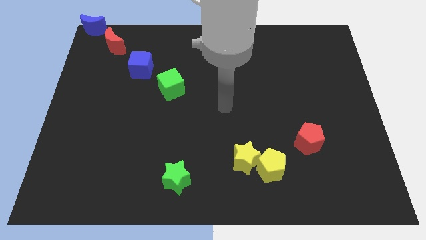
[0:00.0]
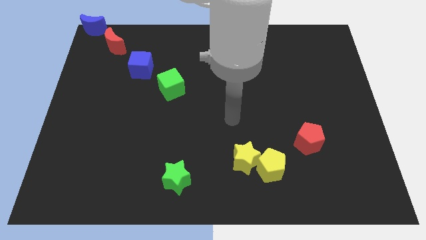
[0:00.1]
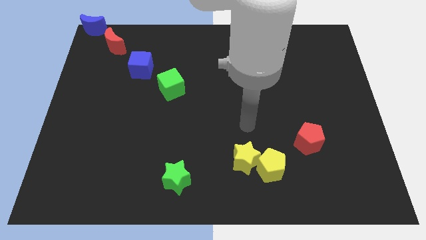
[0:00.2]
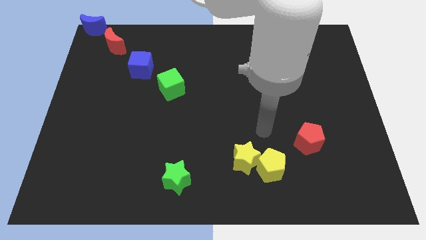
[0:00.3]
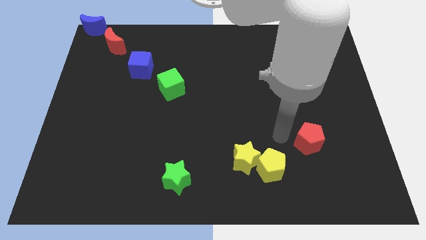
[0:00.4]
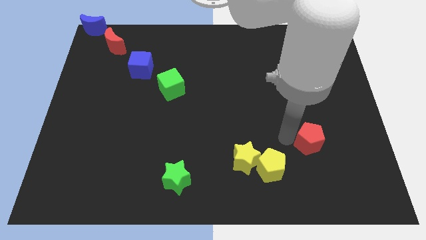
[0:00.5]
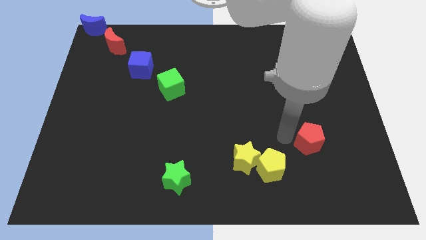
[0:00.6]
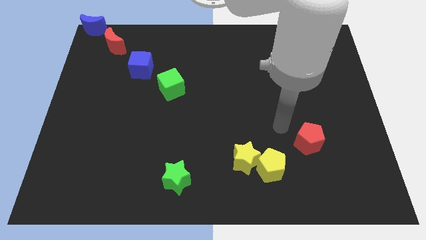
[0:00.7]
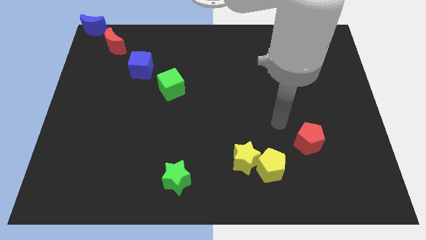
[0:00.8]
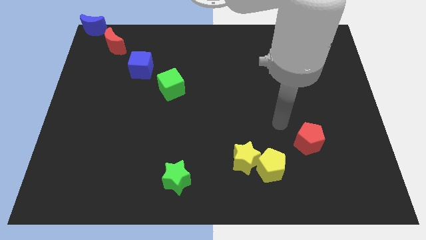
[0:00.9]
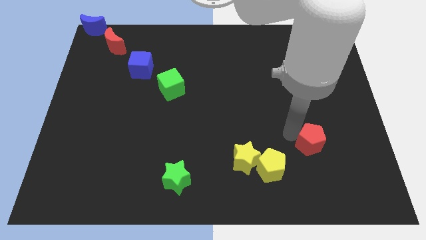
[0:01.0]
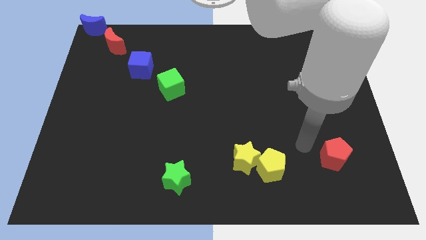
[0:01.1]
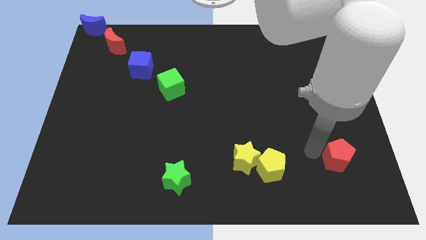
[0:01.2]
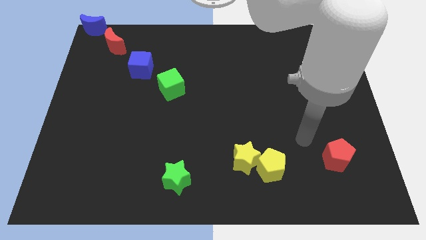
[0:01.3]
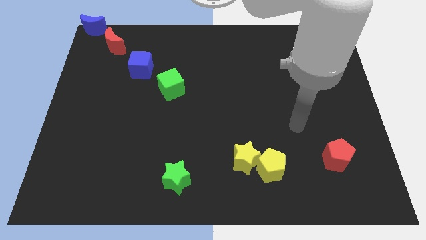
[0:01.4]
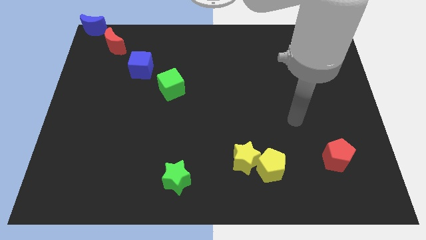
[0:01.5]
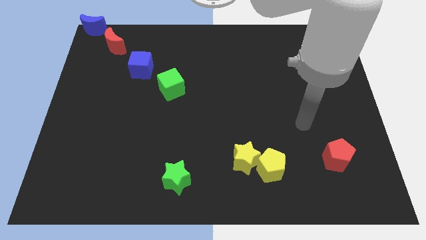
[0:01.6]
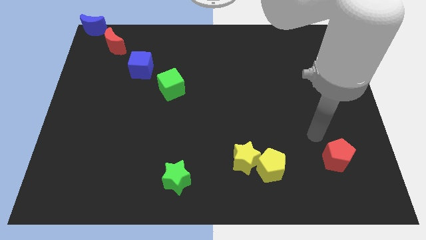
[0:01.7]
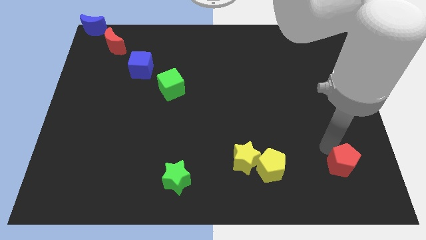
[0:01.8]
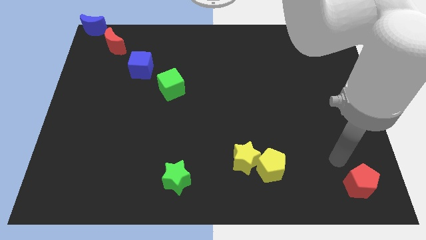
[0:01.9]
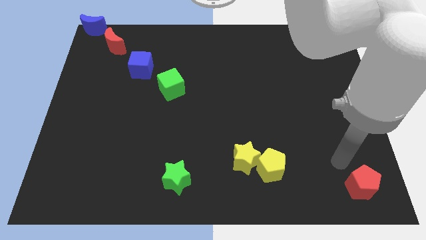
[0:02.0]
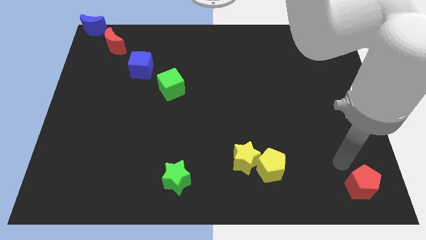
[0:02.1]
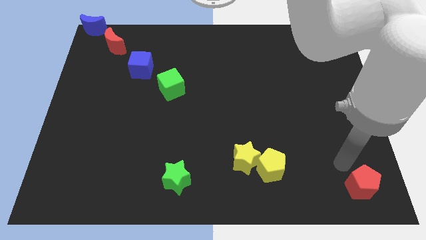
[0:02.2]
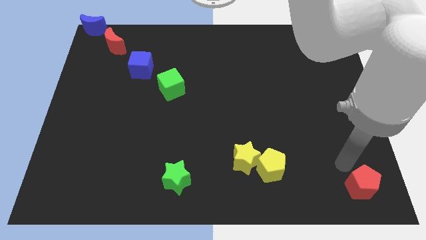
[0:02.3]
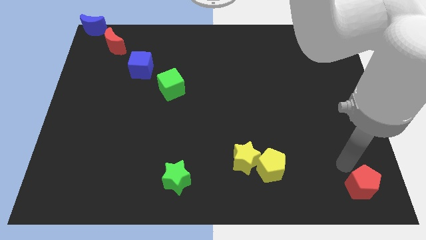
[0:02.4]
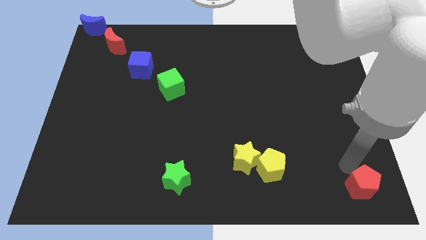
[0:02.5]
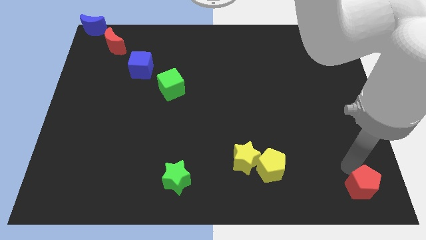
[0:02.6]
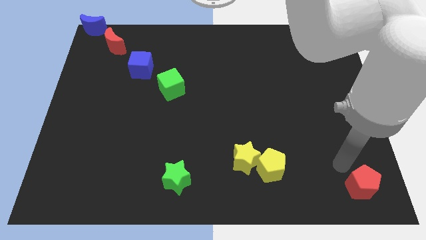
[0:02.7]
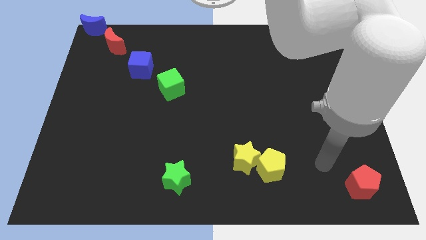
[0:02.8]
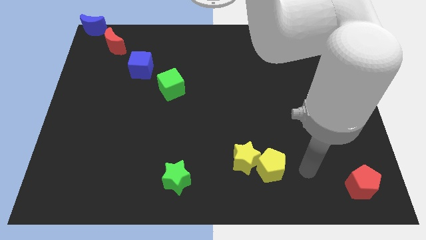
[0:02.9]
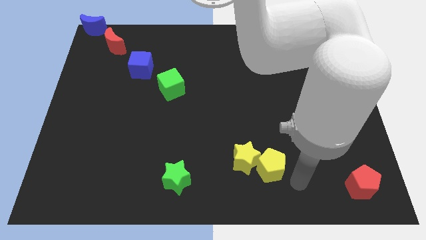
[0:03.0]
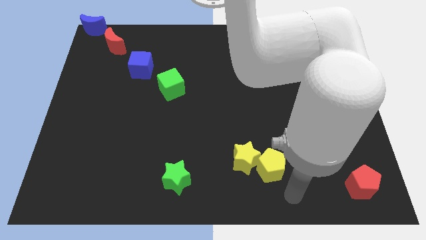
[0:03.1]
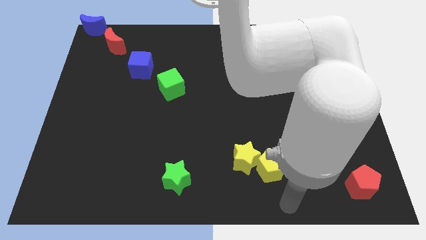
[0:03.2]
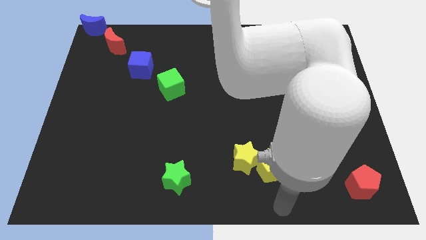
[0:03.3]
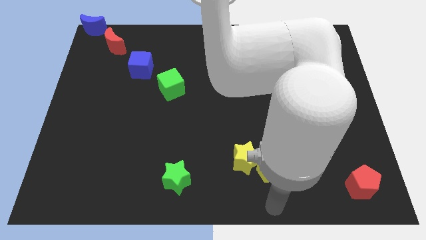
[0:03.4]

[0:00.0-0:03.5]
move the red pentagon to the bottom right side of the board

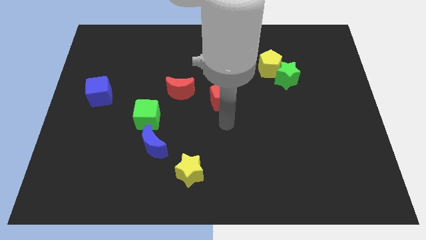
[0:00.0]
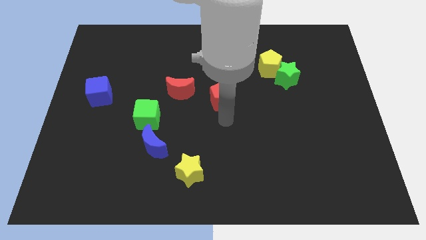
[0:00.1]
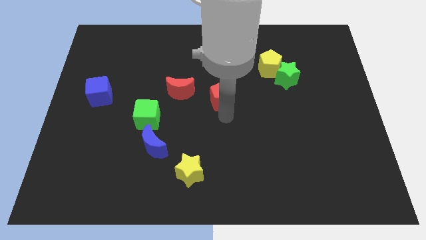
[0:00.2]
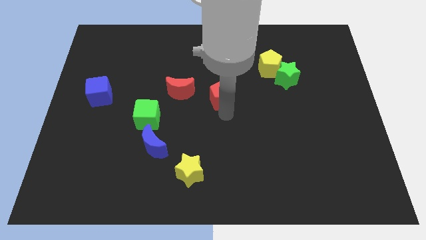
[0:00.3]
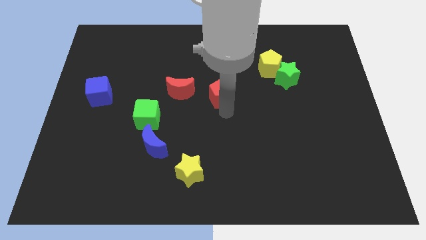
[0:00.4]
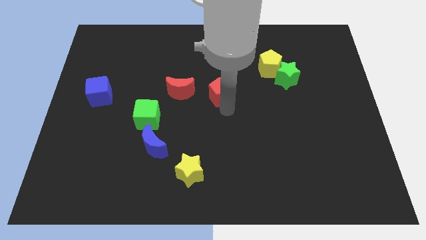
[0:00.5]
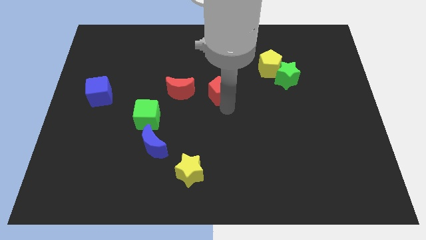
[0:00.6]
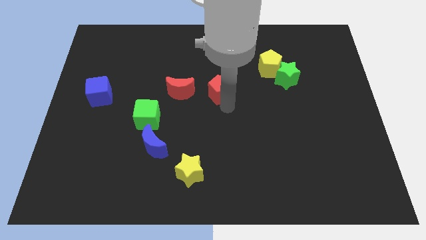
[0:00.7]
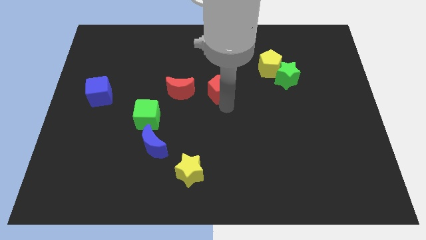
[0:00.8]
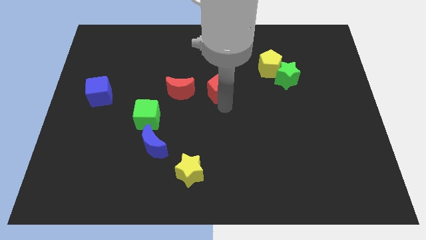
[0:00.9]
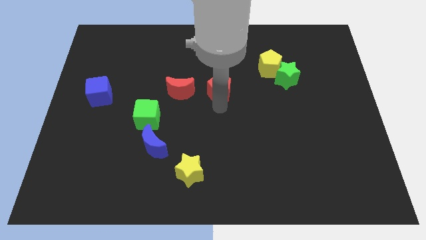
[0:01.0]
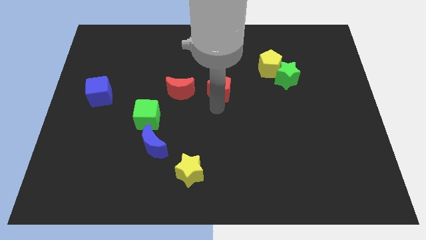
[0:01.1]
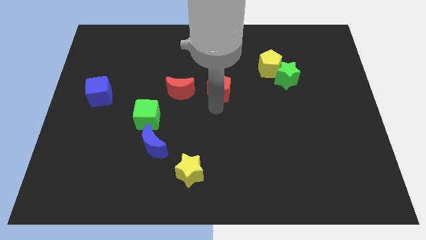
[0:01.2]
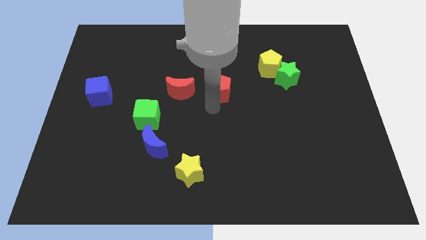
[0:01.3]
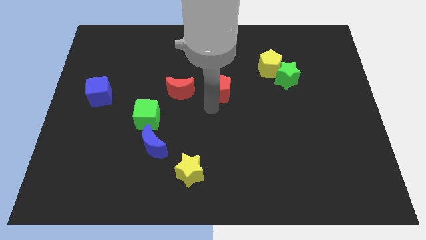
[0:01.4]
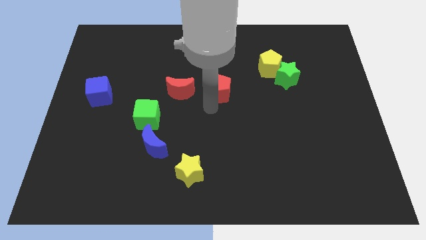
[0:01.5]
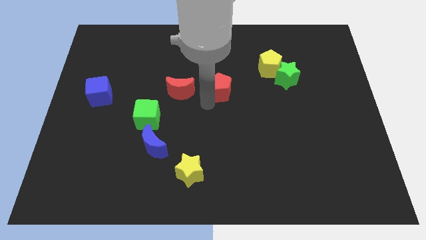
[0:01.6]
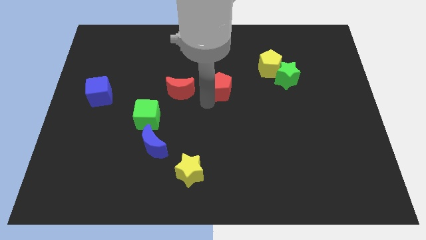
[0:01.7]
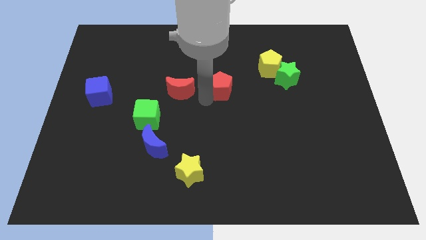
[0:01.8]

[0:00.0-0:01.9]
place red pentagon to the right of the red moon

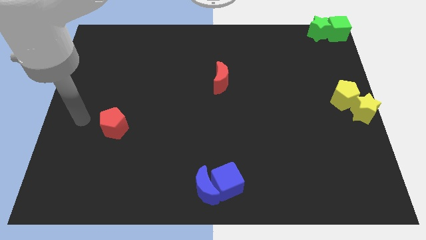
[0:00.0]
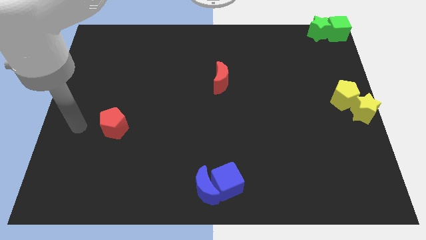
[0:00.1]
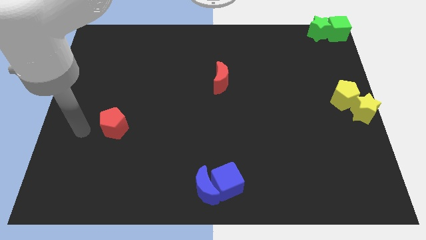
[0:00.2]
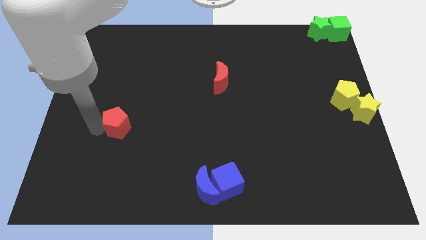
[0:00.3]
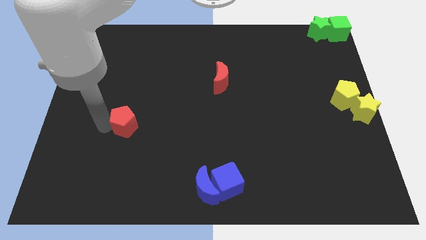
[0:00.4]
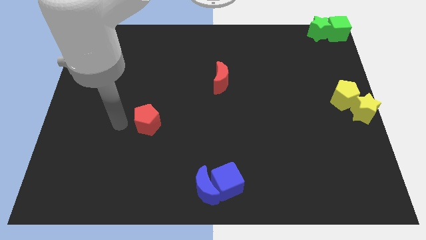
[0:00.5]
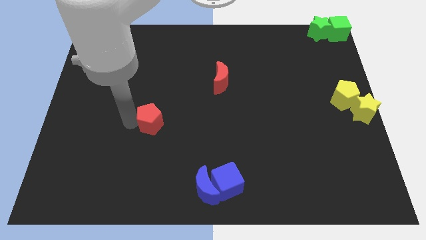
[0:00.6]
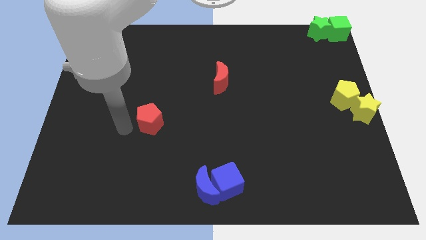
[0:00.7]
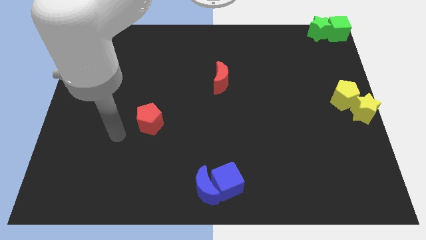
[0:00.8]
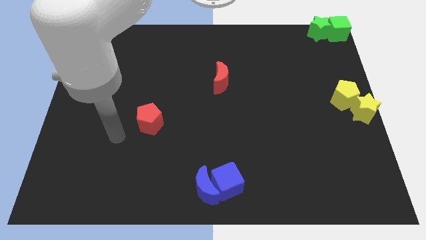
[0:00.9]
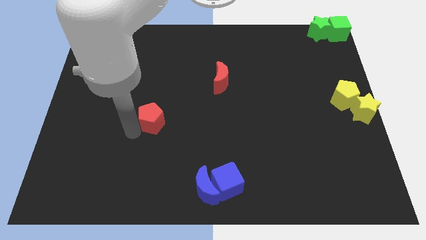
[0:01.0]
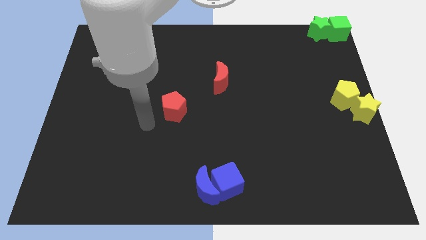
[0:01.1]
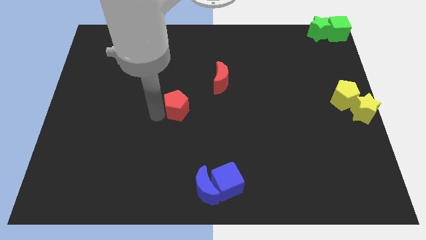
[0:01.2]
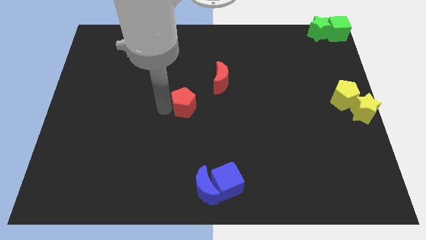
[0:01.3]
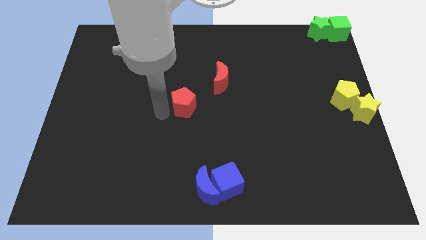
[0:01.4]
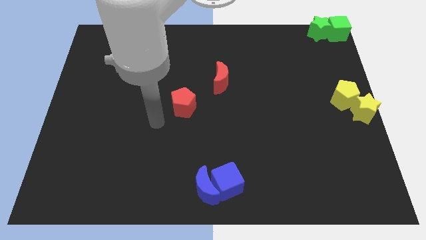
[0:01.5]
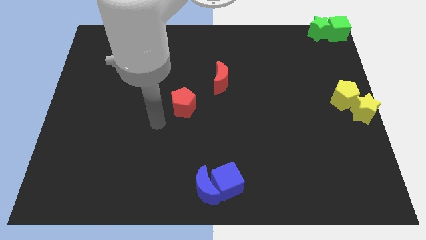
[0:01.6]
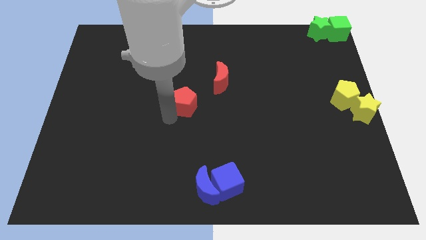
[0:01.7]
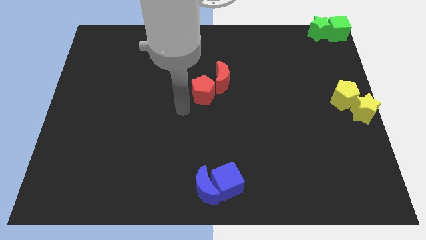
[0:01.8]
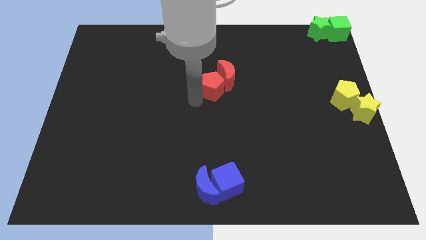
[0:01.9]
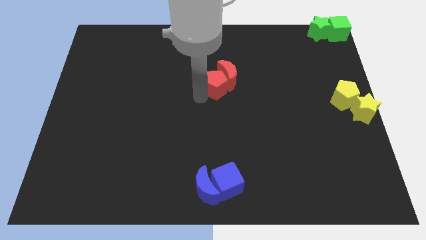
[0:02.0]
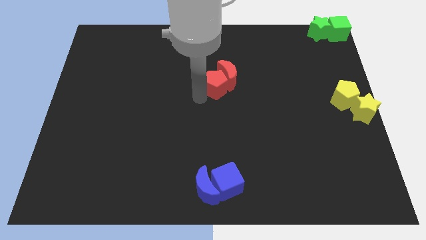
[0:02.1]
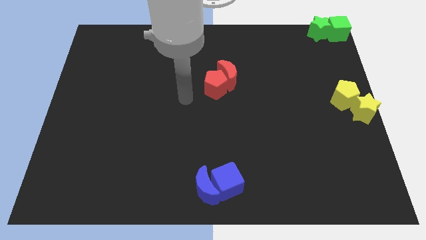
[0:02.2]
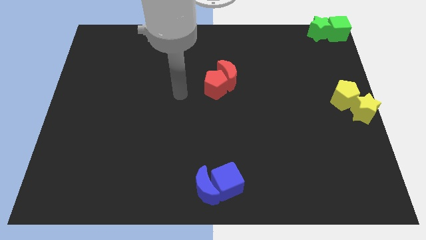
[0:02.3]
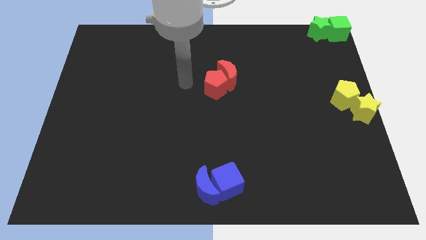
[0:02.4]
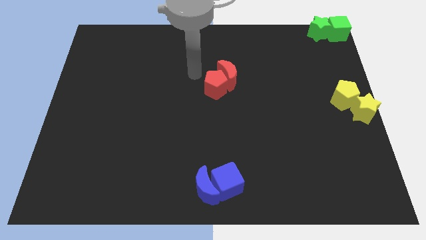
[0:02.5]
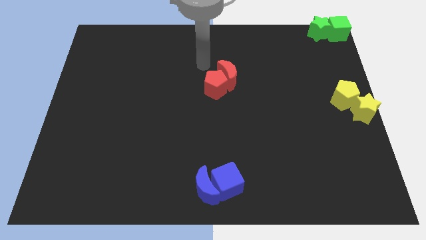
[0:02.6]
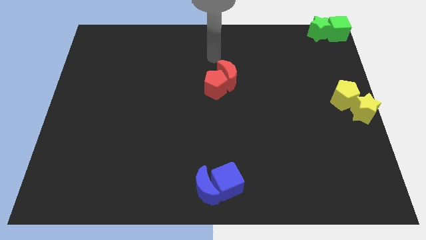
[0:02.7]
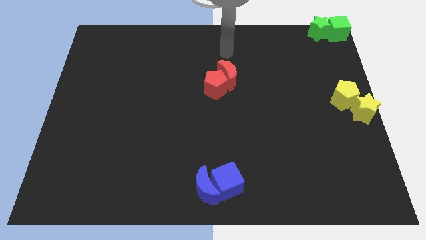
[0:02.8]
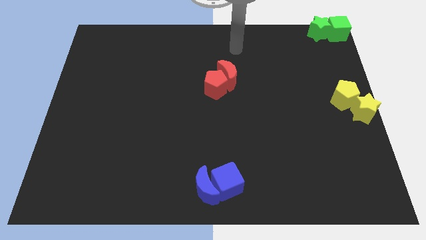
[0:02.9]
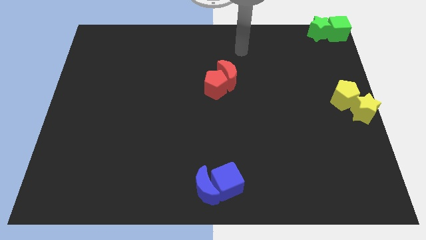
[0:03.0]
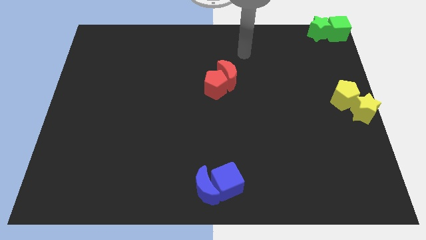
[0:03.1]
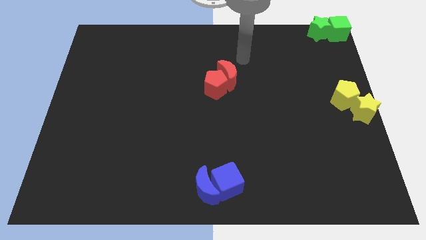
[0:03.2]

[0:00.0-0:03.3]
push the red pentagon into red crescent

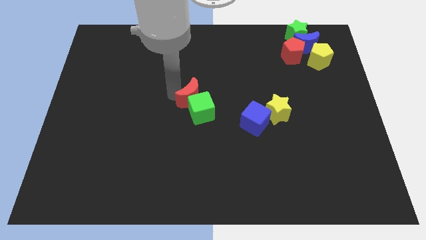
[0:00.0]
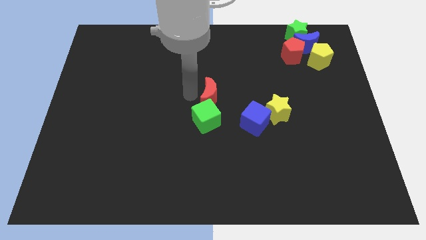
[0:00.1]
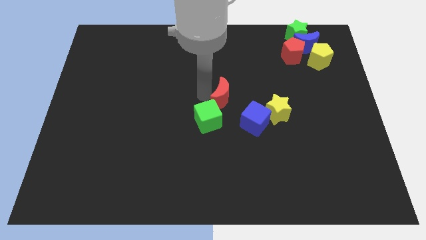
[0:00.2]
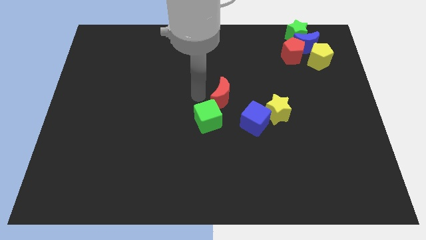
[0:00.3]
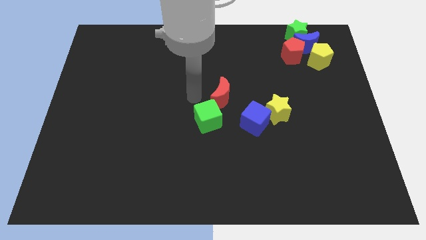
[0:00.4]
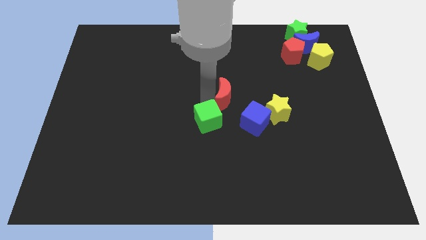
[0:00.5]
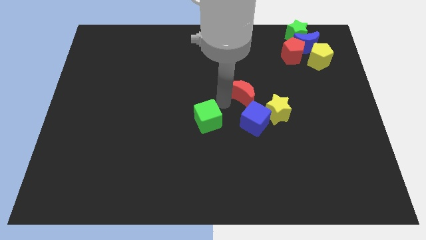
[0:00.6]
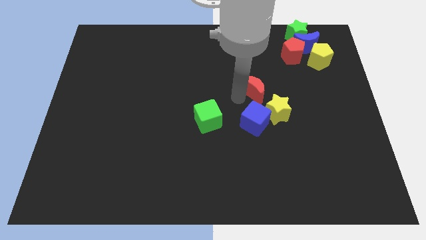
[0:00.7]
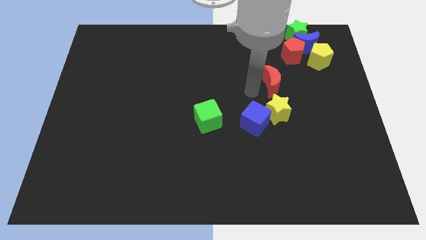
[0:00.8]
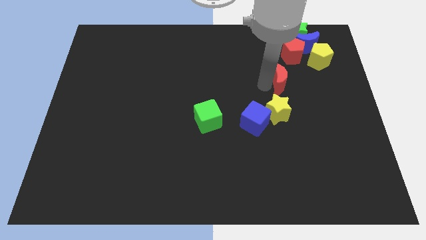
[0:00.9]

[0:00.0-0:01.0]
push the red crescent to the top of the yellow star
